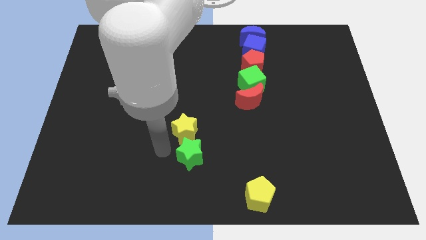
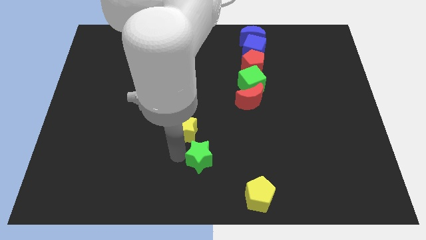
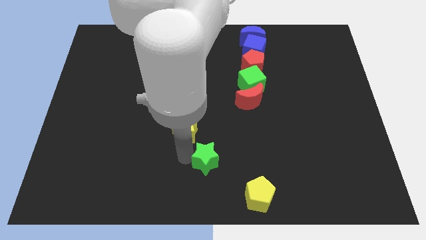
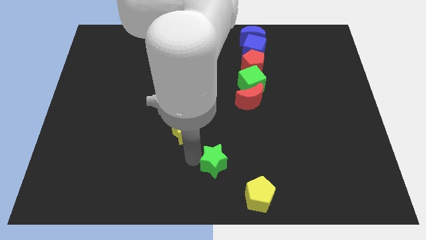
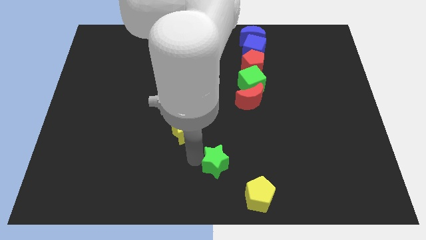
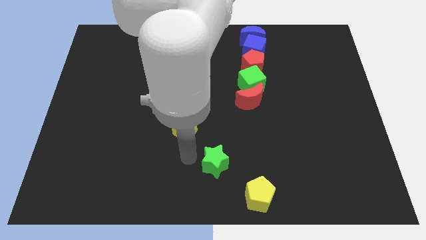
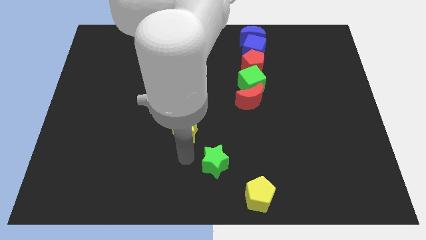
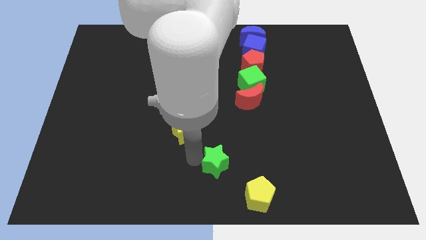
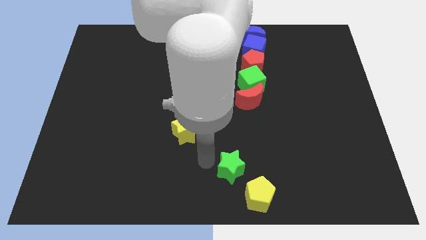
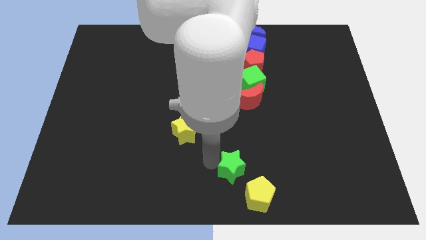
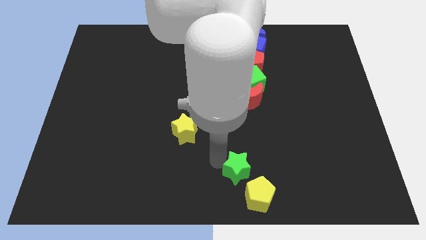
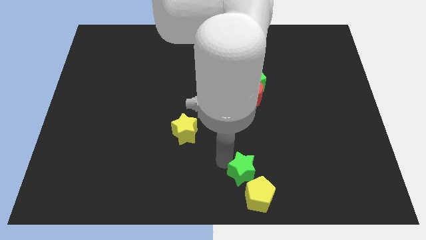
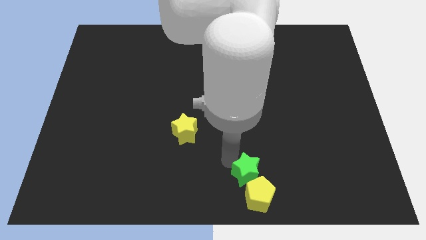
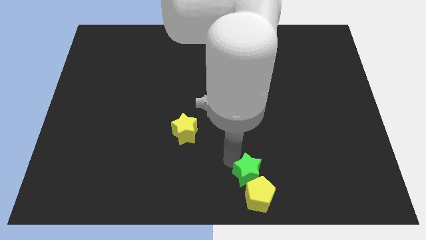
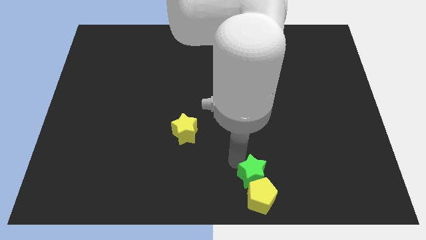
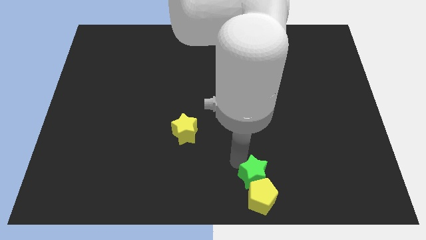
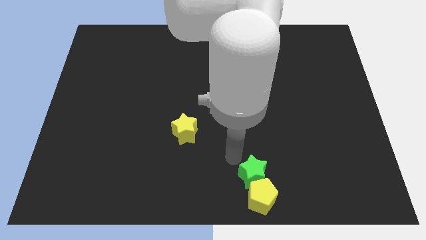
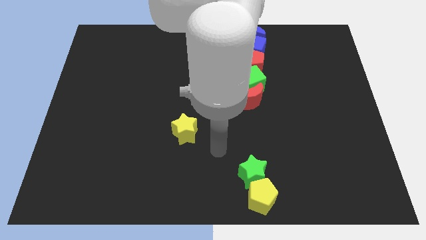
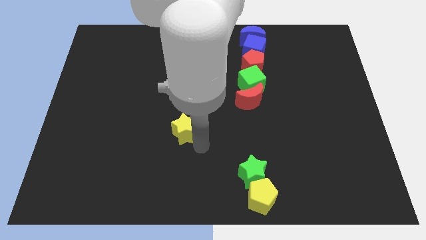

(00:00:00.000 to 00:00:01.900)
move the green star into the yellow pentagon

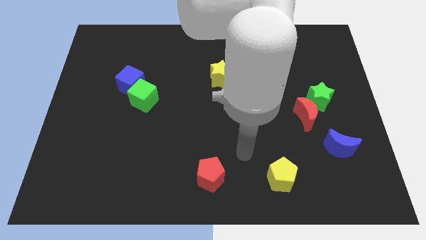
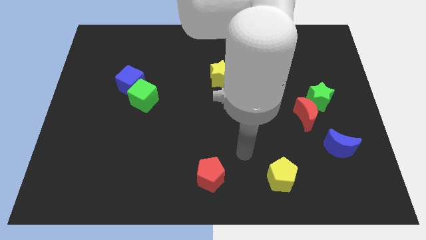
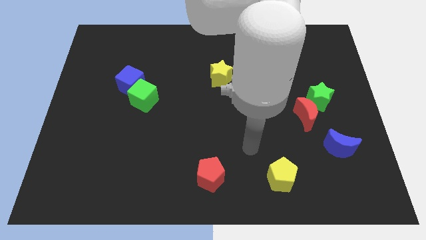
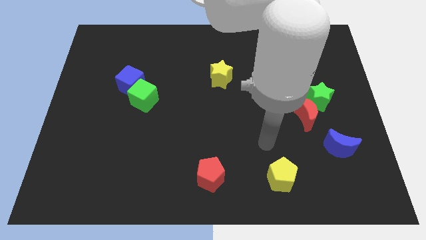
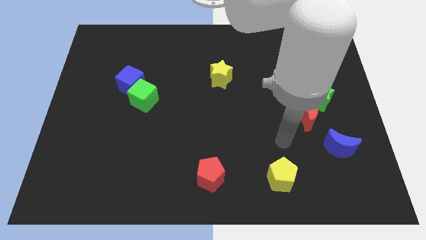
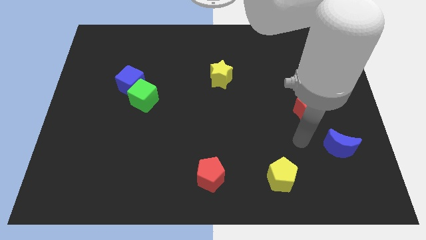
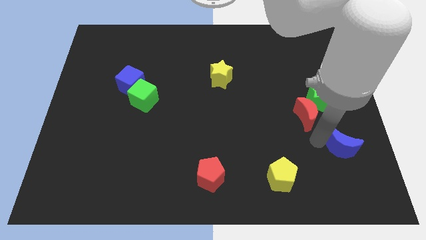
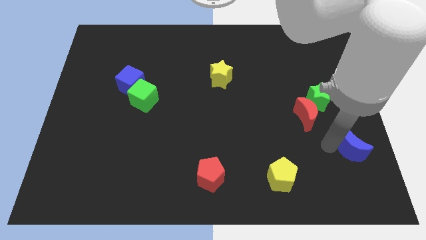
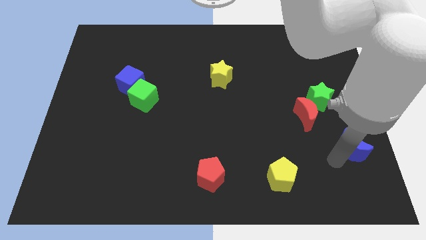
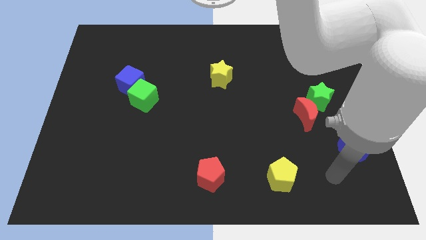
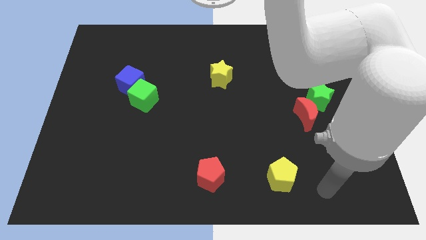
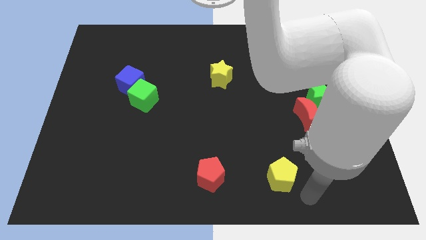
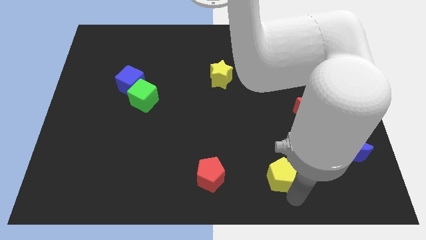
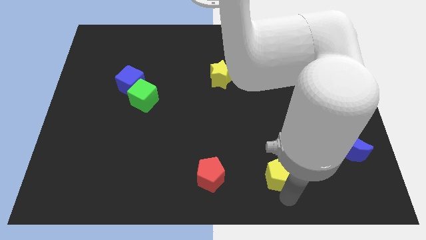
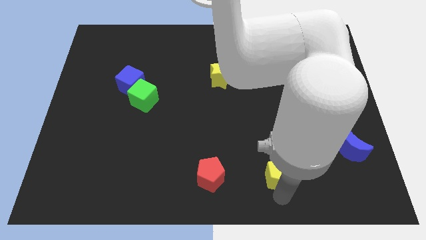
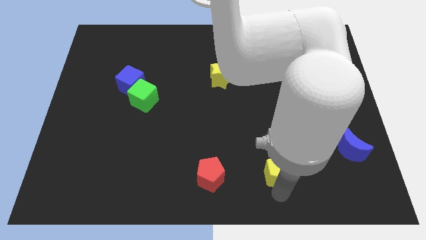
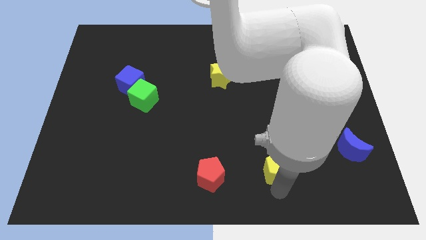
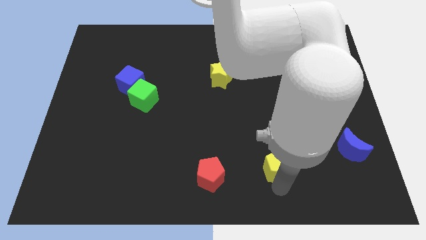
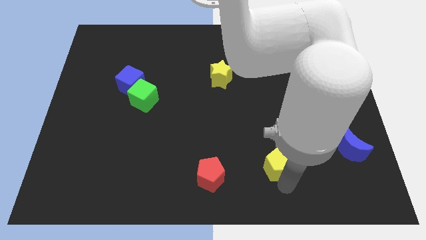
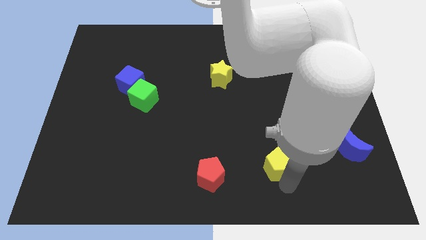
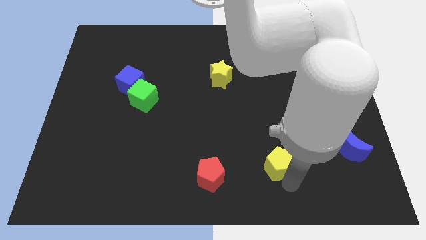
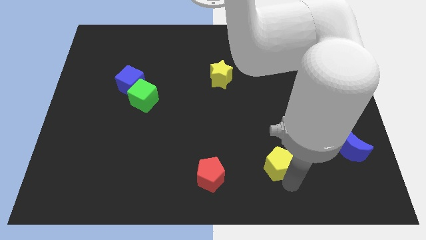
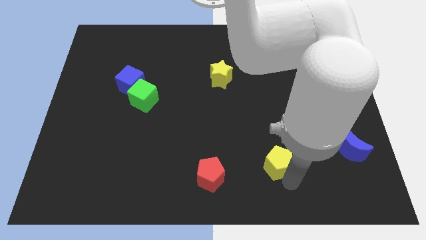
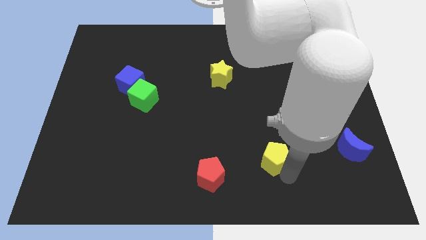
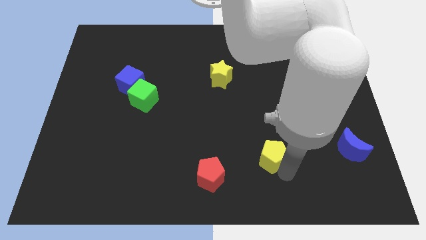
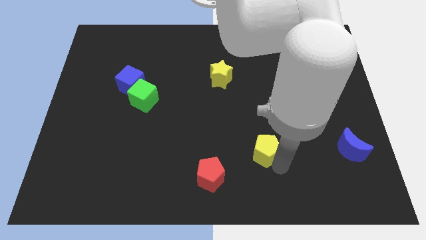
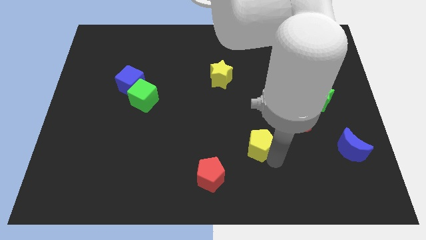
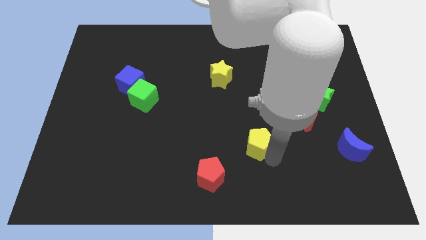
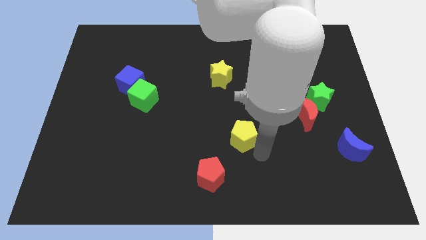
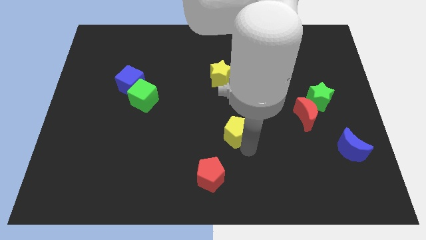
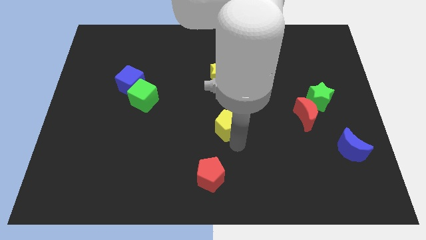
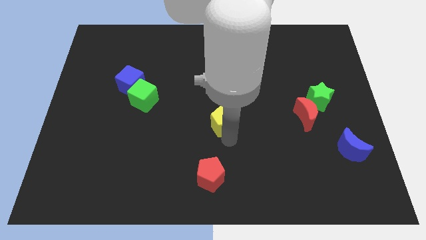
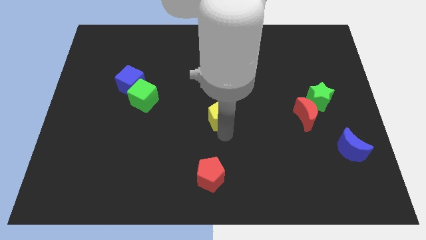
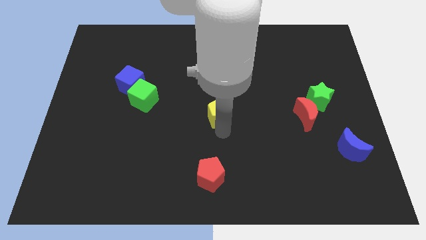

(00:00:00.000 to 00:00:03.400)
place yellow pentagon to the bottom of yellow star

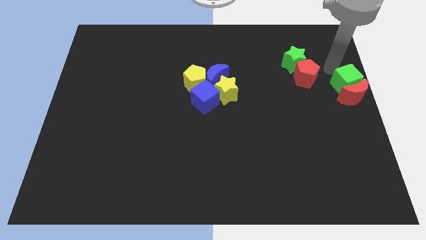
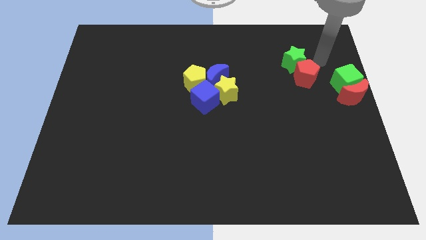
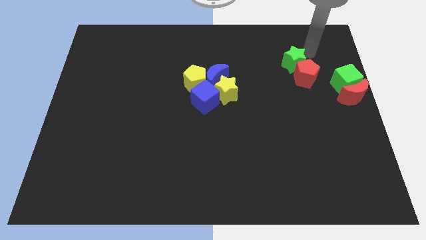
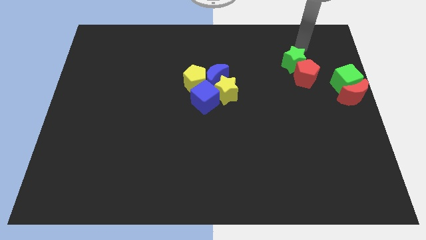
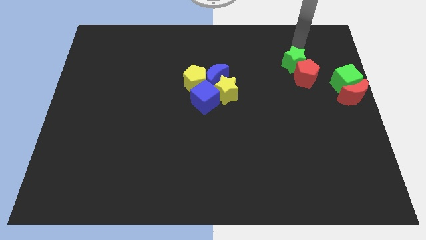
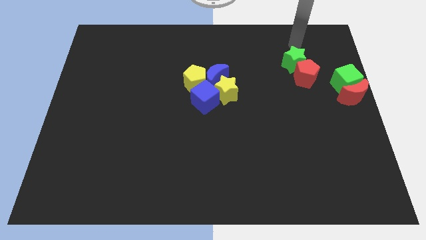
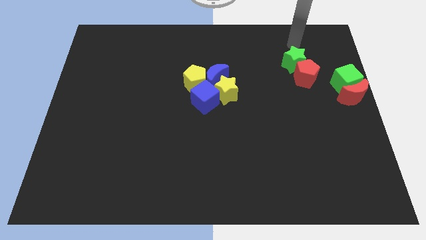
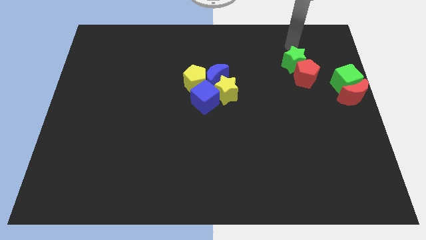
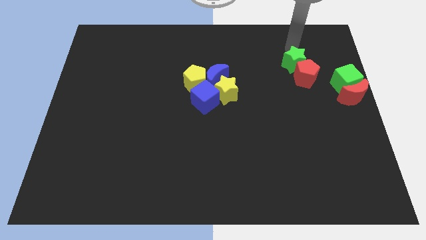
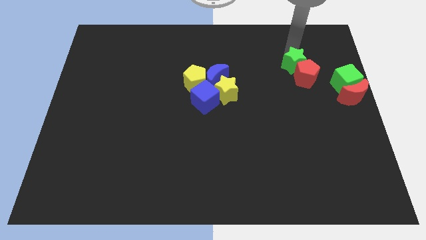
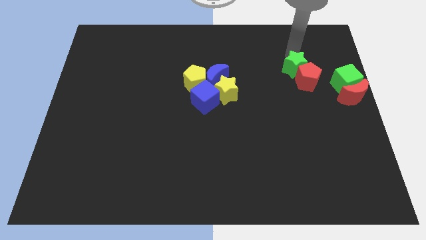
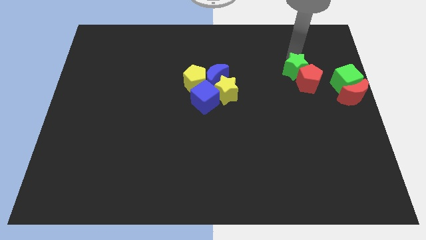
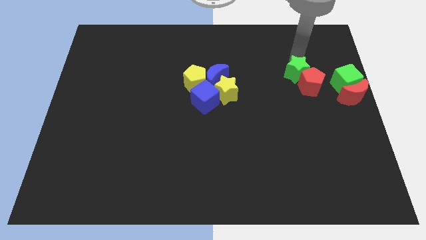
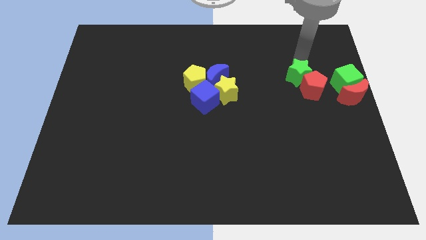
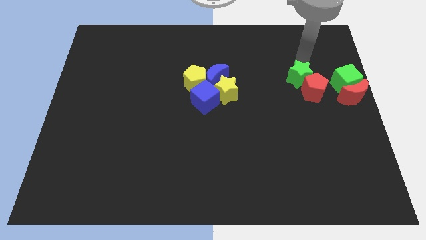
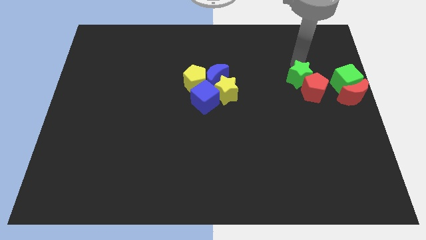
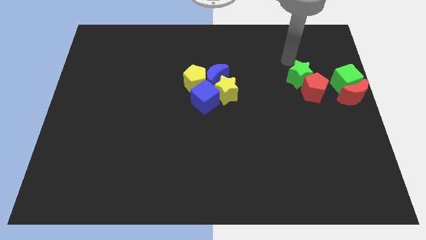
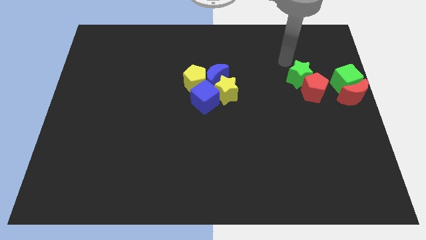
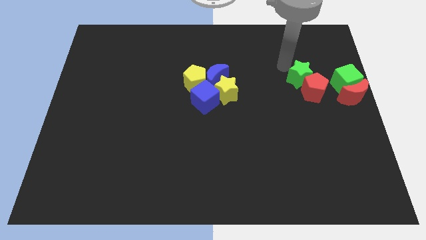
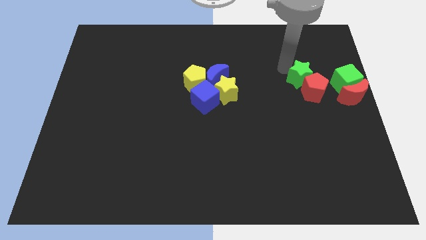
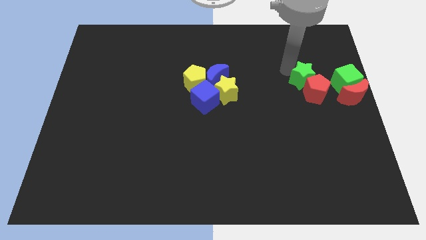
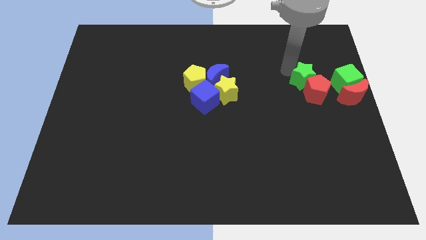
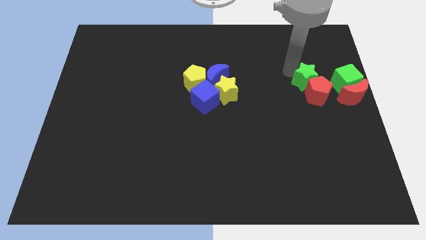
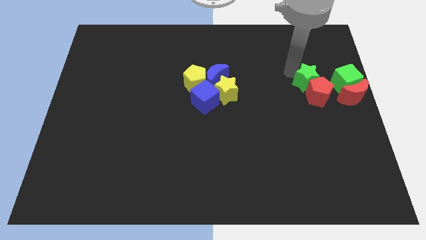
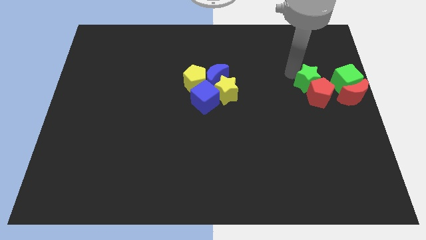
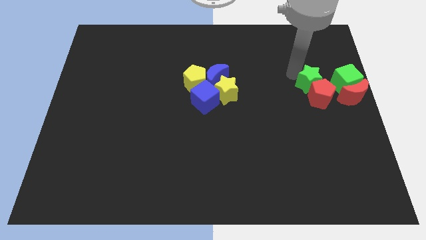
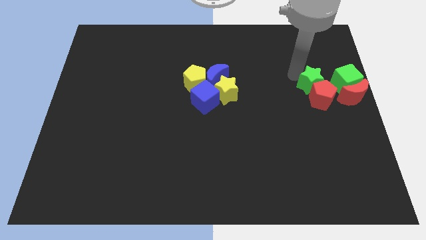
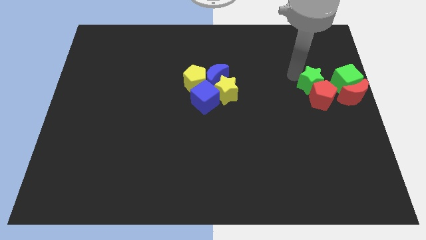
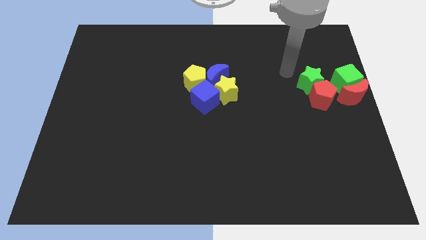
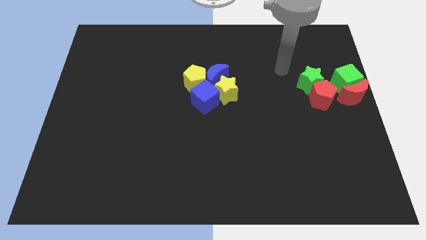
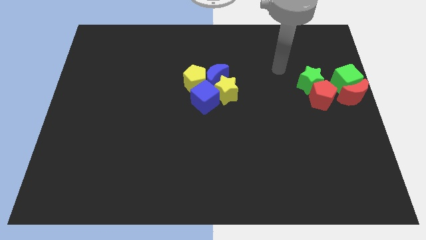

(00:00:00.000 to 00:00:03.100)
slightly move the green star into the red pentagon

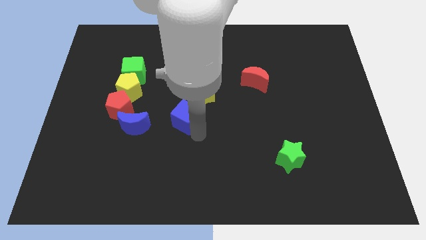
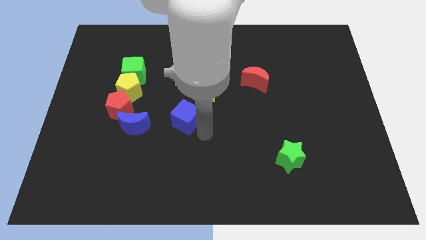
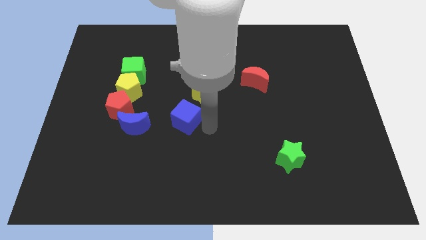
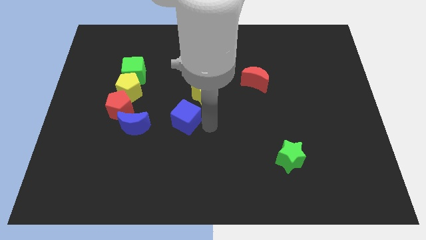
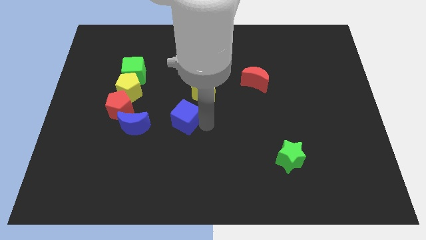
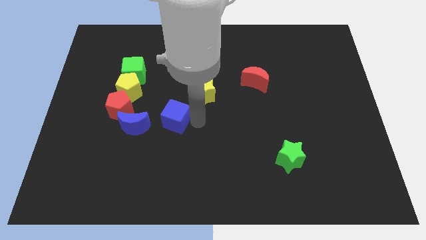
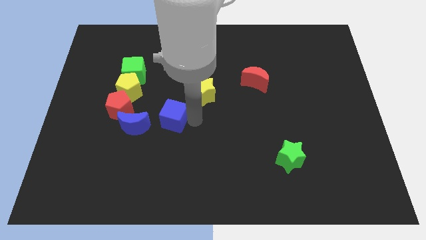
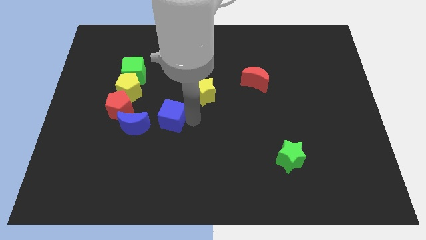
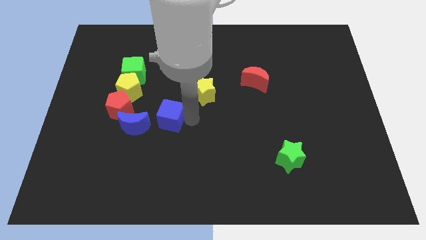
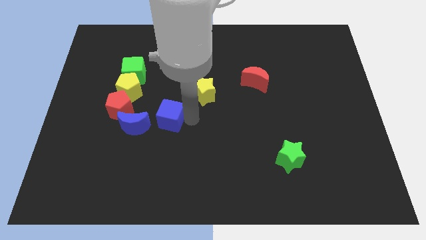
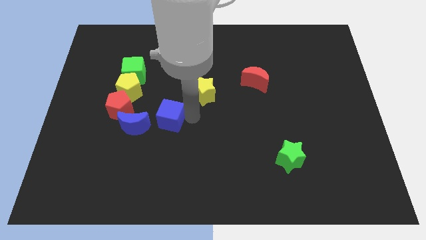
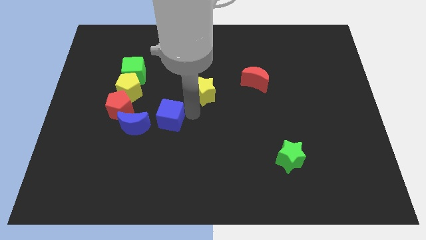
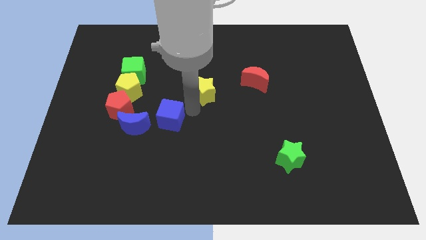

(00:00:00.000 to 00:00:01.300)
move the blue cube to the right of the blue crescent
